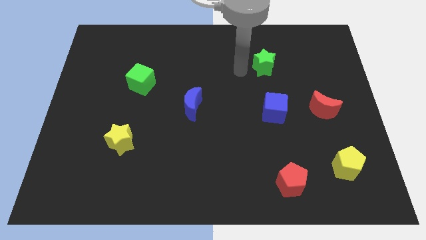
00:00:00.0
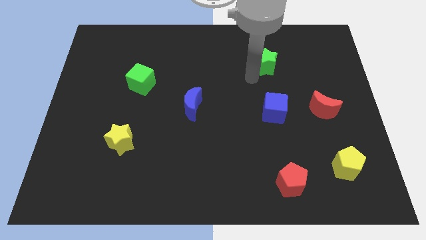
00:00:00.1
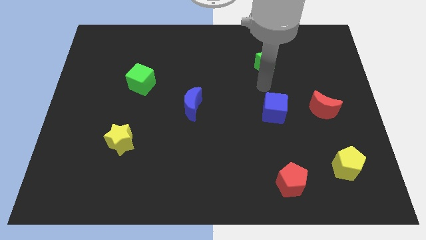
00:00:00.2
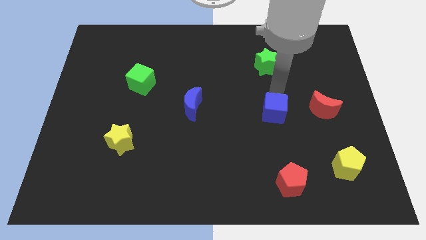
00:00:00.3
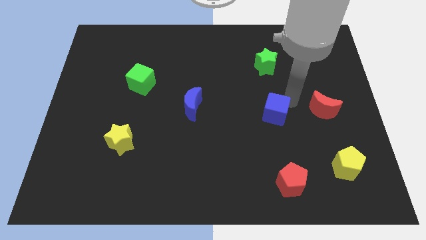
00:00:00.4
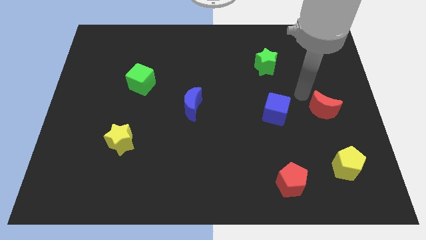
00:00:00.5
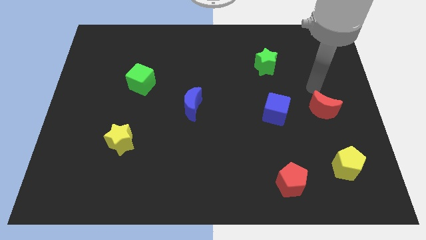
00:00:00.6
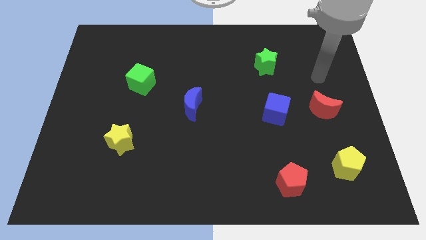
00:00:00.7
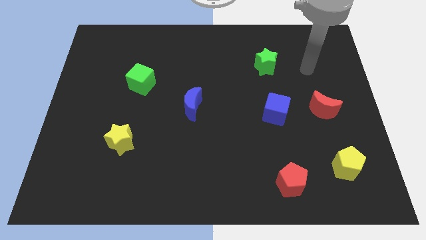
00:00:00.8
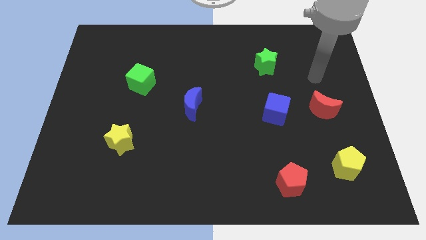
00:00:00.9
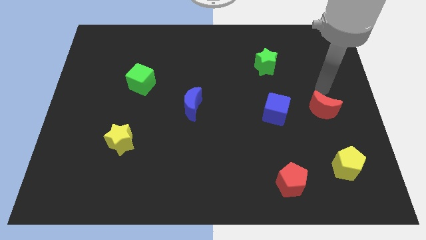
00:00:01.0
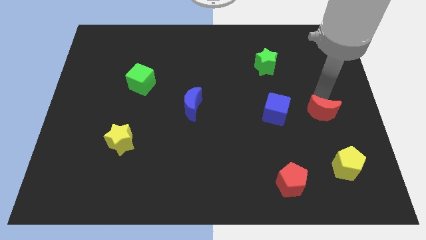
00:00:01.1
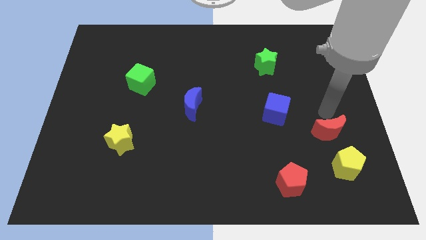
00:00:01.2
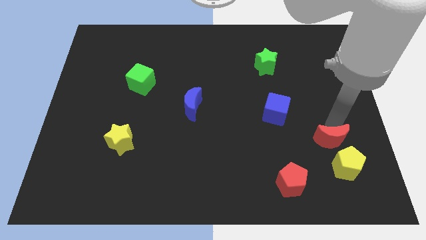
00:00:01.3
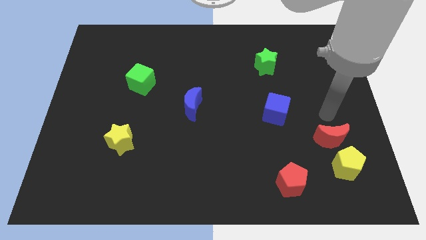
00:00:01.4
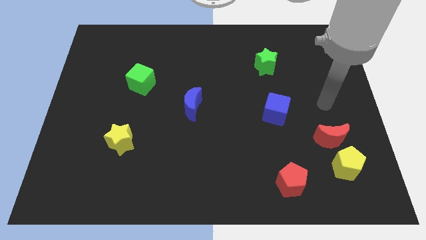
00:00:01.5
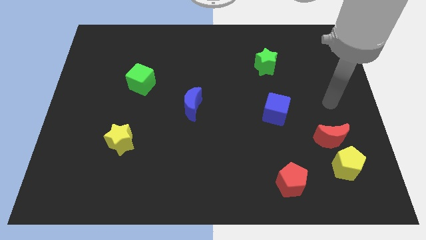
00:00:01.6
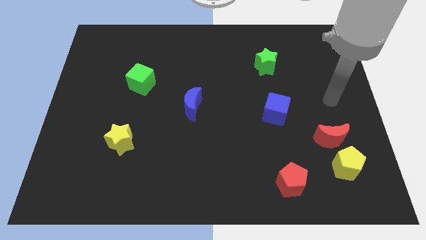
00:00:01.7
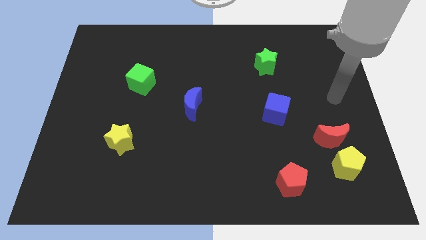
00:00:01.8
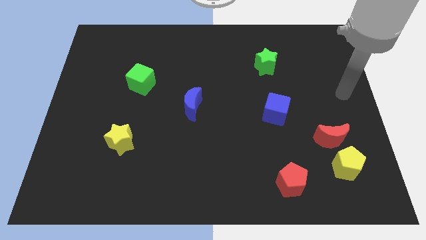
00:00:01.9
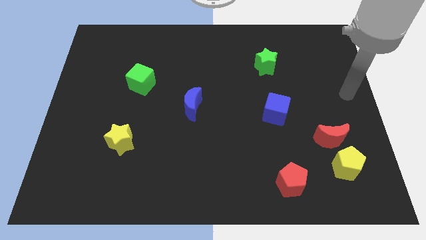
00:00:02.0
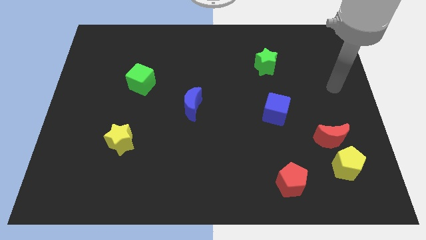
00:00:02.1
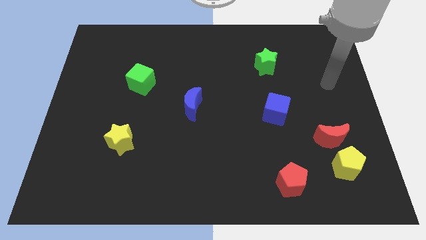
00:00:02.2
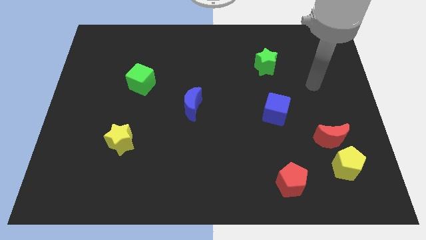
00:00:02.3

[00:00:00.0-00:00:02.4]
push the red crescent towards the yellow pentagon and go away

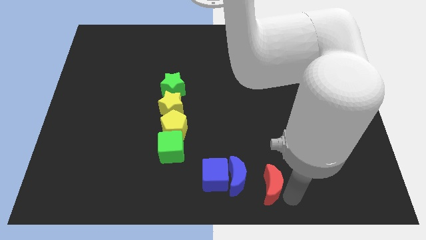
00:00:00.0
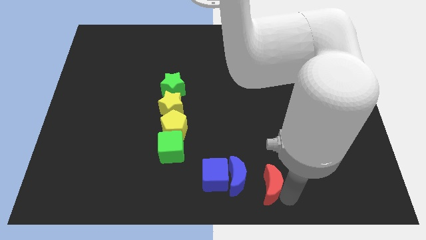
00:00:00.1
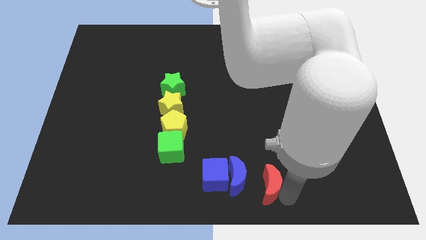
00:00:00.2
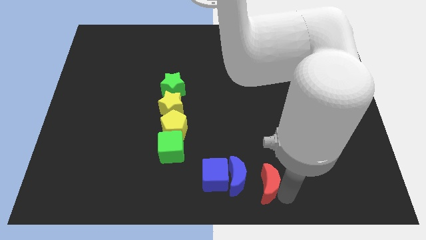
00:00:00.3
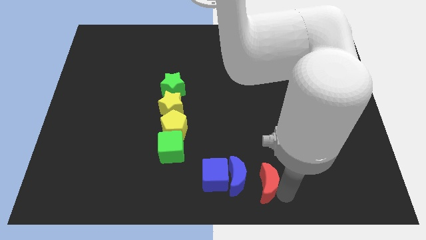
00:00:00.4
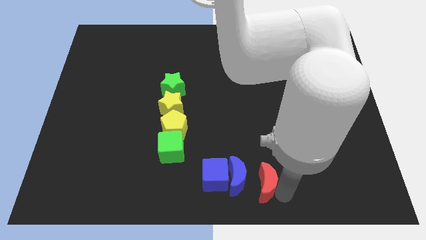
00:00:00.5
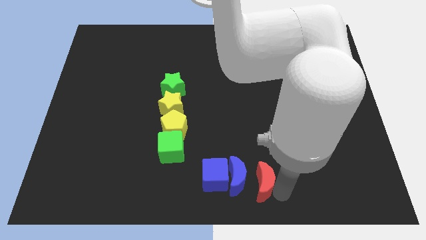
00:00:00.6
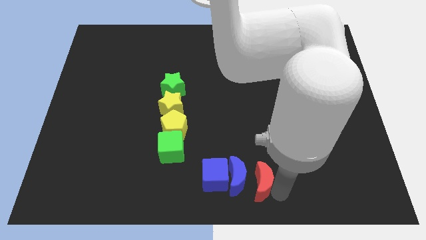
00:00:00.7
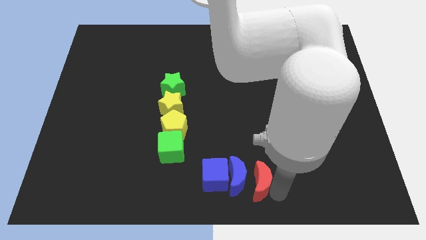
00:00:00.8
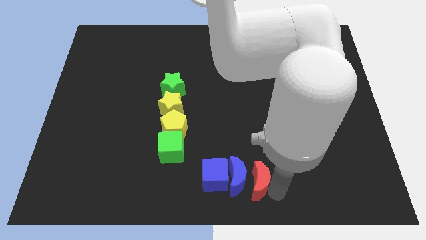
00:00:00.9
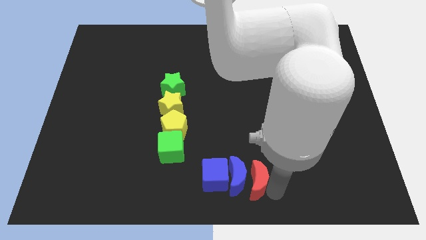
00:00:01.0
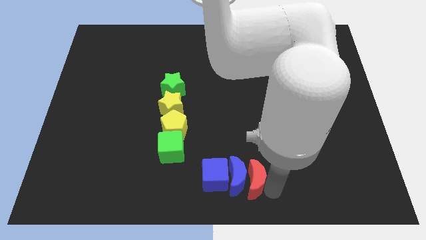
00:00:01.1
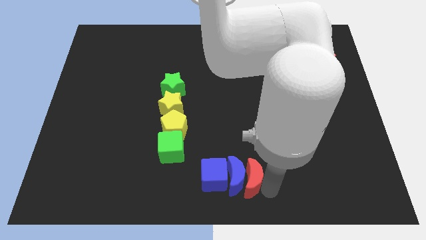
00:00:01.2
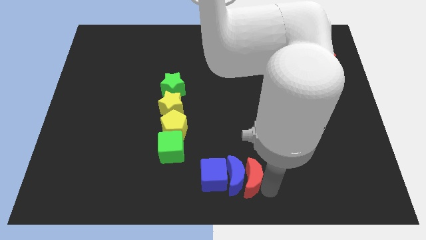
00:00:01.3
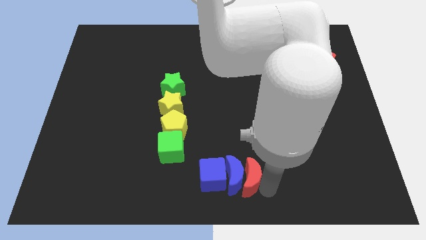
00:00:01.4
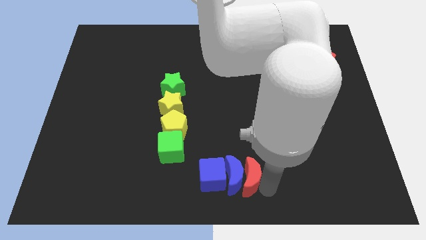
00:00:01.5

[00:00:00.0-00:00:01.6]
move the red crescent into the blue crescent

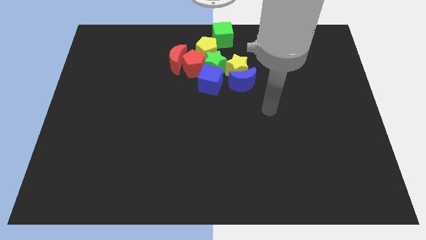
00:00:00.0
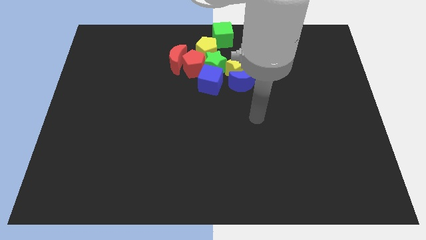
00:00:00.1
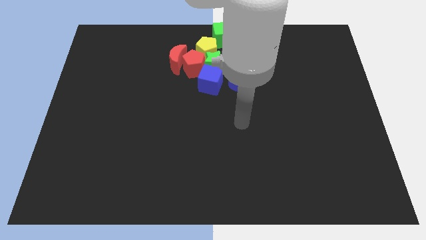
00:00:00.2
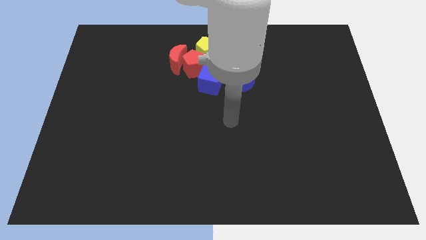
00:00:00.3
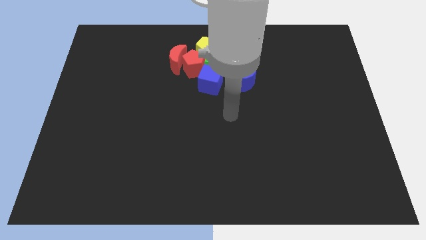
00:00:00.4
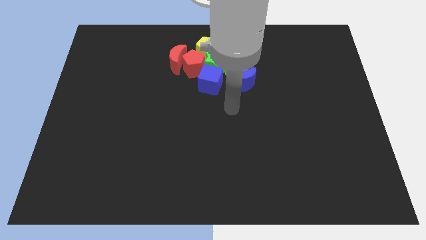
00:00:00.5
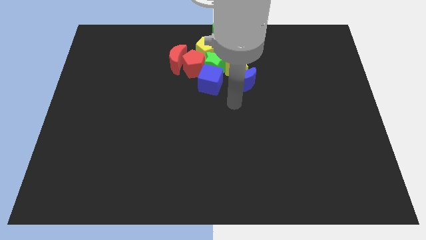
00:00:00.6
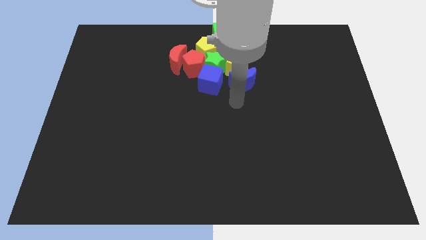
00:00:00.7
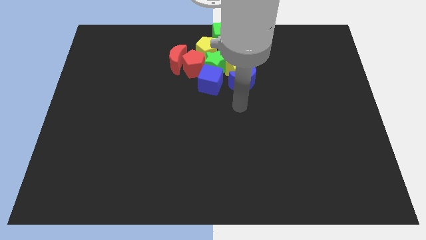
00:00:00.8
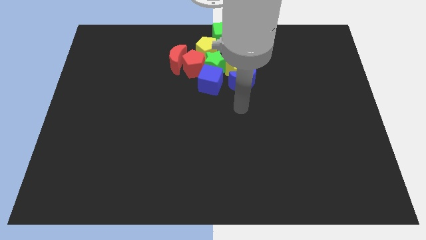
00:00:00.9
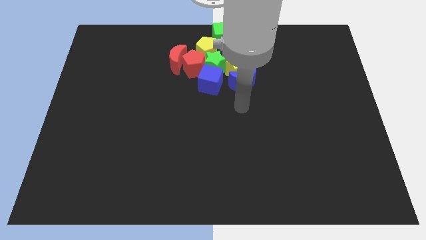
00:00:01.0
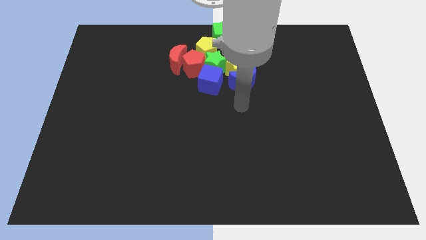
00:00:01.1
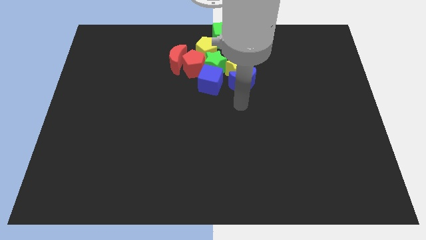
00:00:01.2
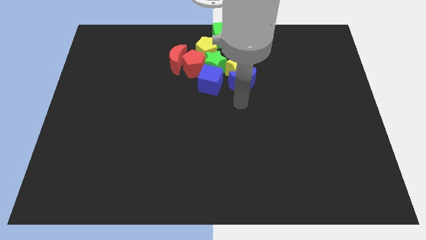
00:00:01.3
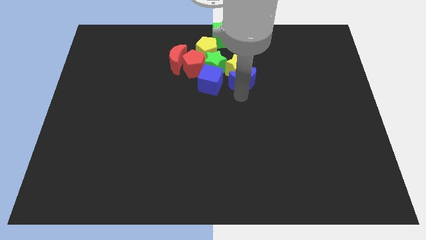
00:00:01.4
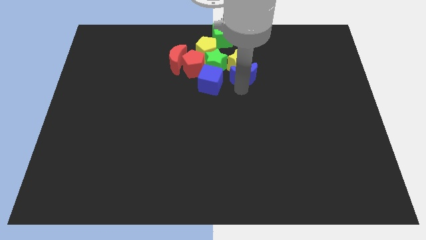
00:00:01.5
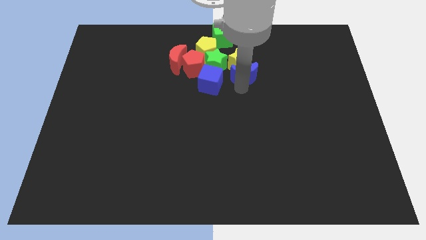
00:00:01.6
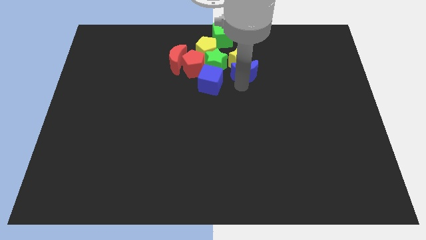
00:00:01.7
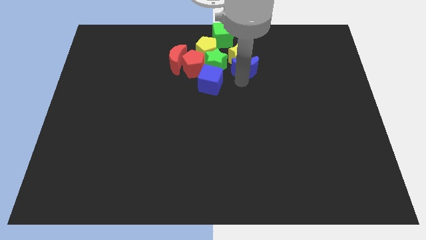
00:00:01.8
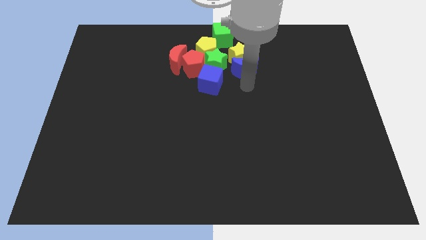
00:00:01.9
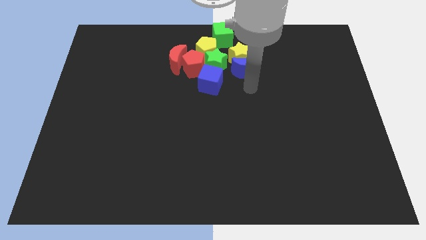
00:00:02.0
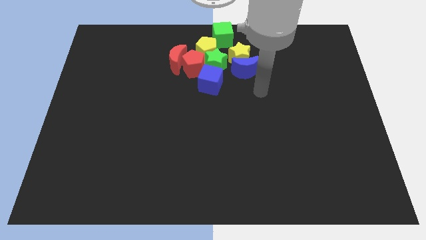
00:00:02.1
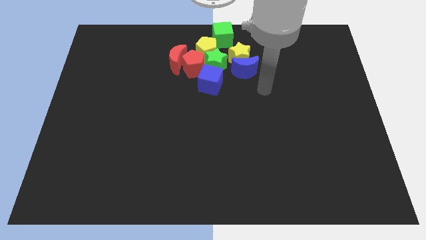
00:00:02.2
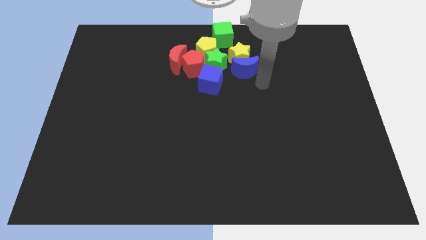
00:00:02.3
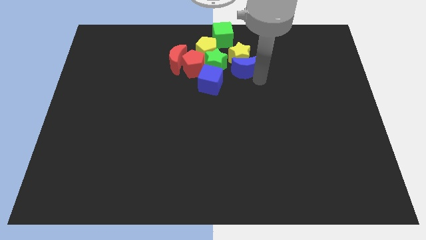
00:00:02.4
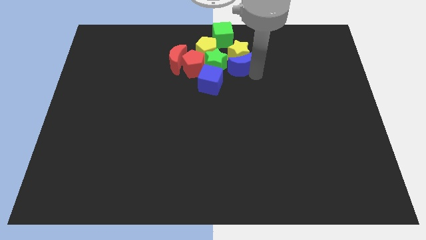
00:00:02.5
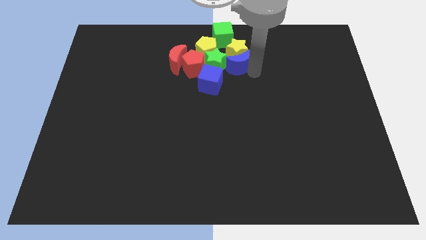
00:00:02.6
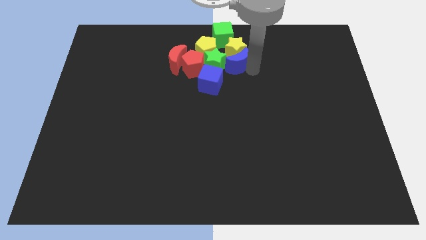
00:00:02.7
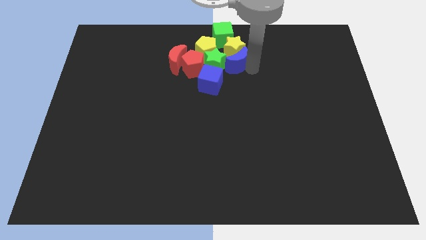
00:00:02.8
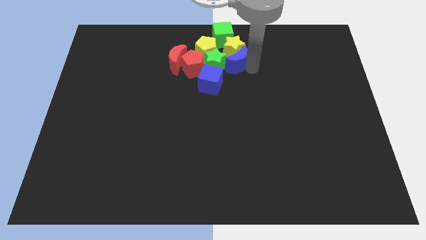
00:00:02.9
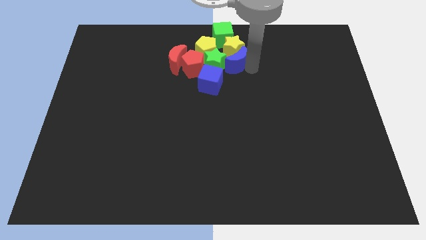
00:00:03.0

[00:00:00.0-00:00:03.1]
slide blue moon to the right of green star

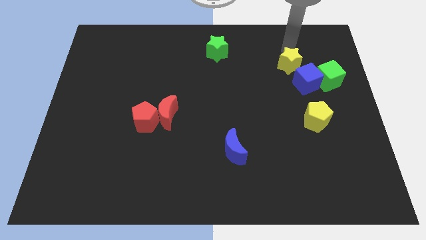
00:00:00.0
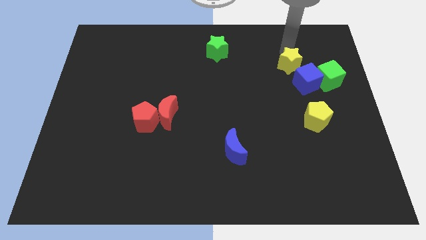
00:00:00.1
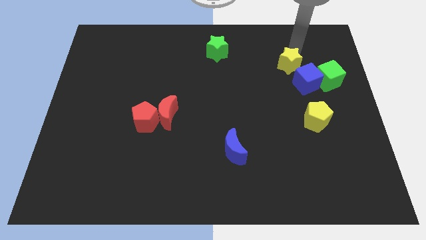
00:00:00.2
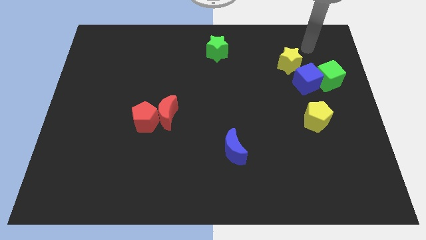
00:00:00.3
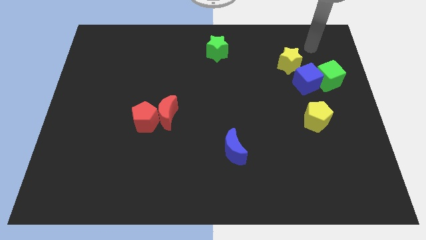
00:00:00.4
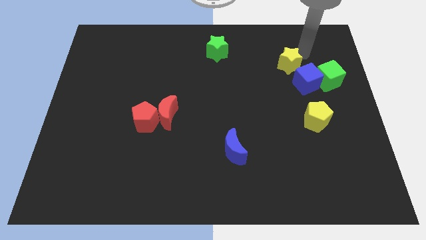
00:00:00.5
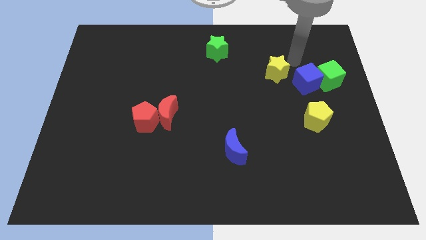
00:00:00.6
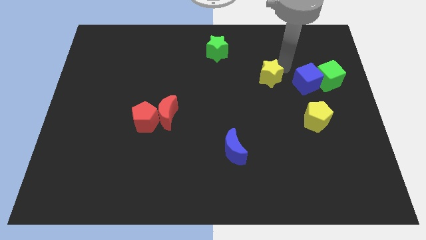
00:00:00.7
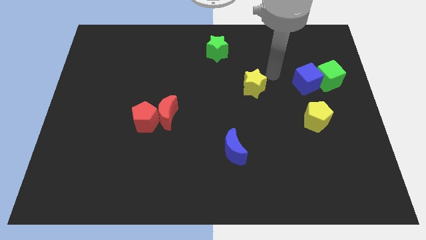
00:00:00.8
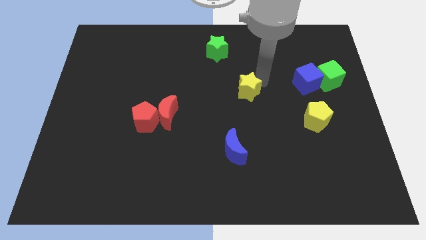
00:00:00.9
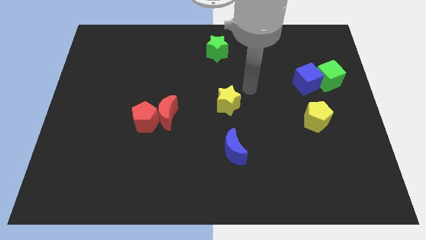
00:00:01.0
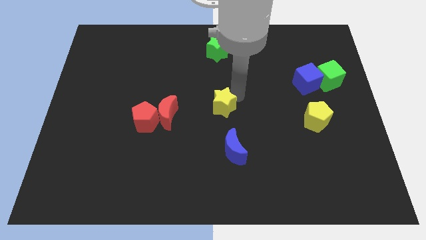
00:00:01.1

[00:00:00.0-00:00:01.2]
place the yellow star at the center of the board

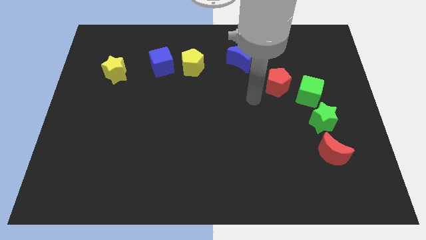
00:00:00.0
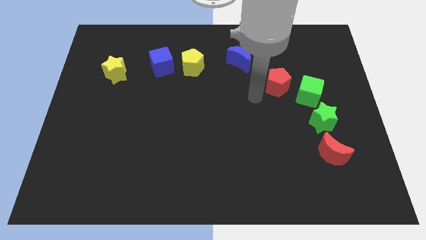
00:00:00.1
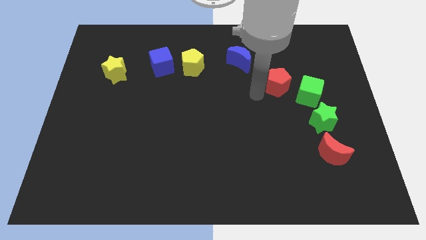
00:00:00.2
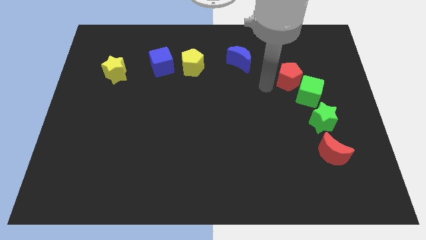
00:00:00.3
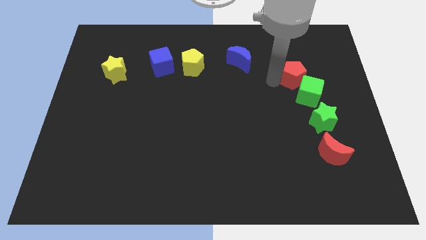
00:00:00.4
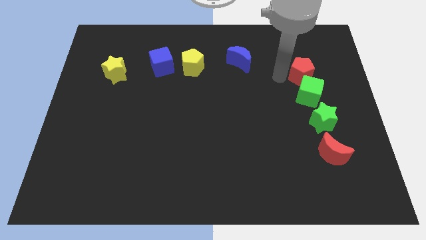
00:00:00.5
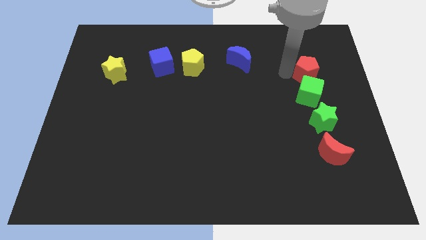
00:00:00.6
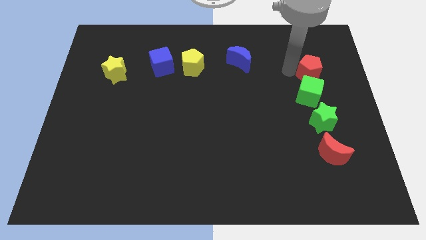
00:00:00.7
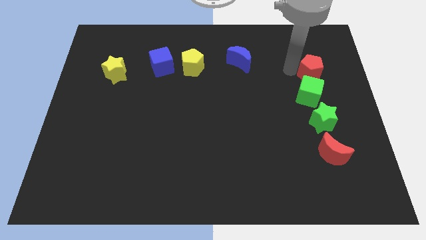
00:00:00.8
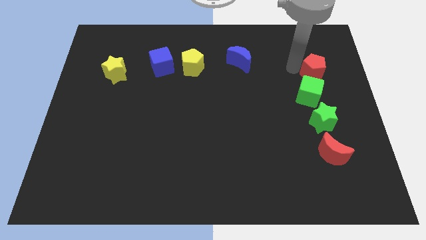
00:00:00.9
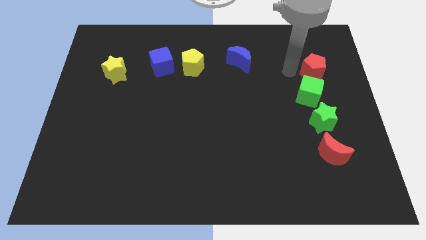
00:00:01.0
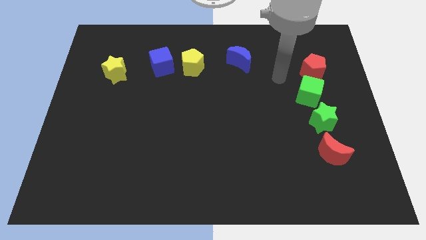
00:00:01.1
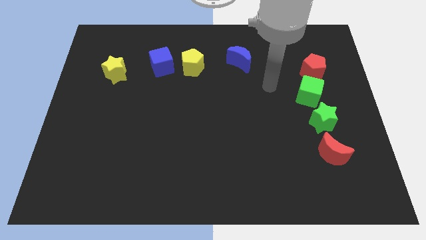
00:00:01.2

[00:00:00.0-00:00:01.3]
move the red pentagon to the top side of the green cube
